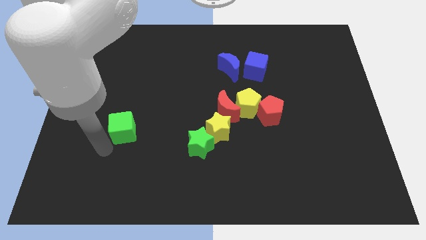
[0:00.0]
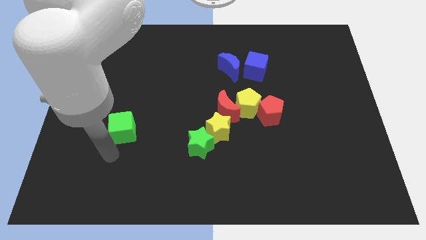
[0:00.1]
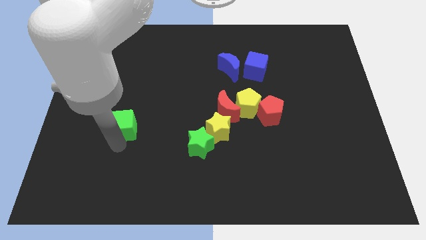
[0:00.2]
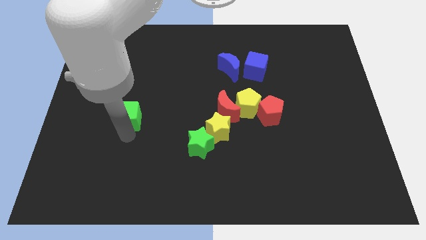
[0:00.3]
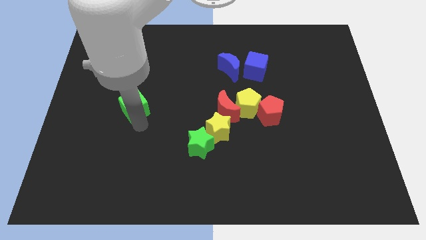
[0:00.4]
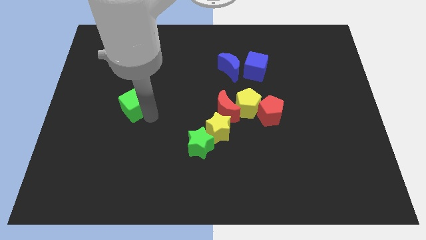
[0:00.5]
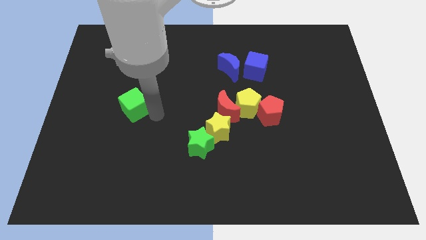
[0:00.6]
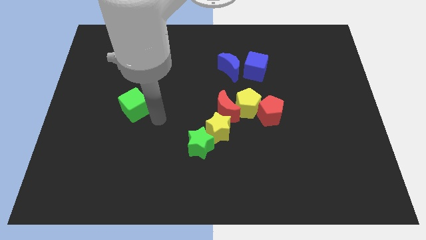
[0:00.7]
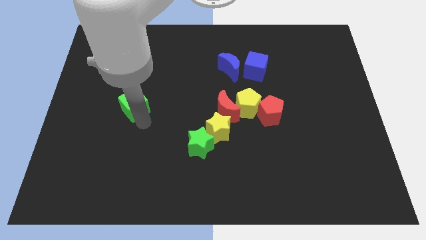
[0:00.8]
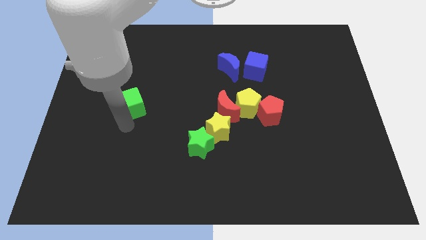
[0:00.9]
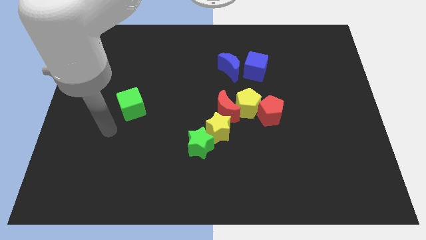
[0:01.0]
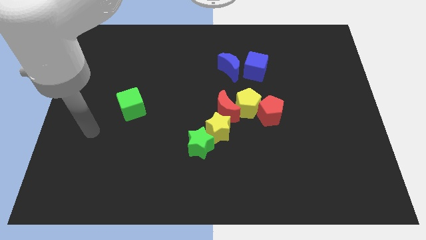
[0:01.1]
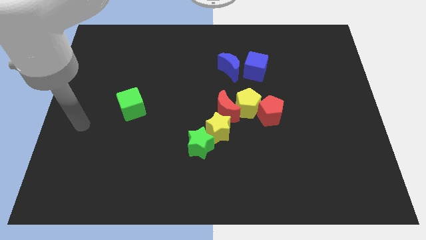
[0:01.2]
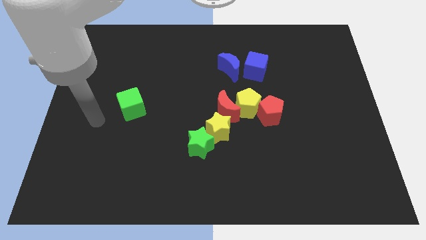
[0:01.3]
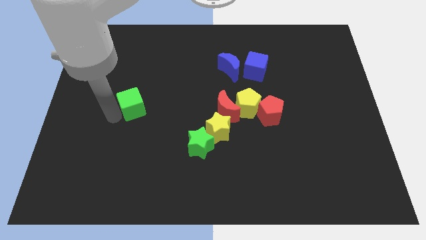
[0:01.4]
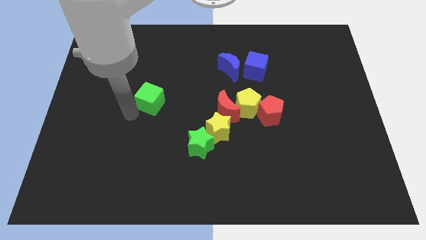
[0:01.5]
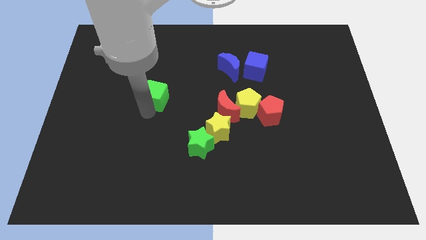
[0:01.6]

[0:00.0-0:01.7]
push the green cube diagonally to the left top of the yellow star

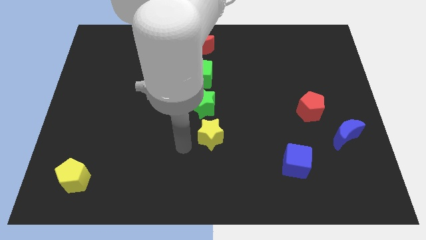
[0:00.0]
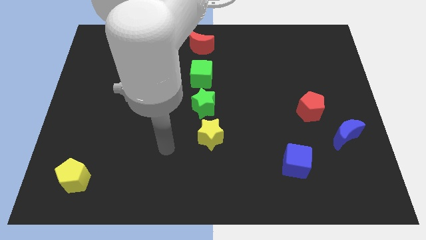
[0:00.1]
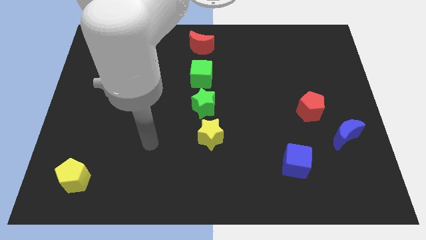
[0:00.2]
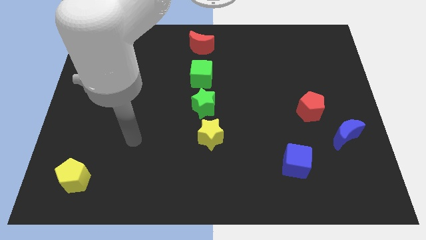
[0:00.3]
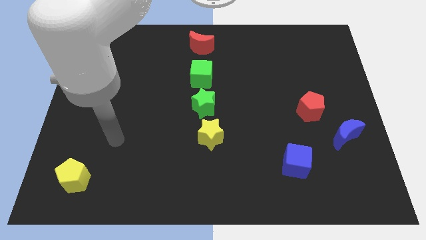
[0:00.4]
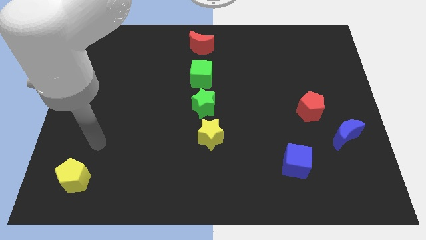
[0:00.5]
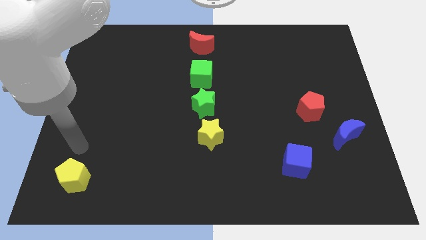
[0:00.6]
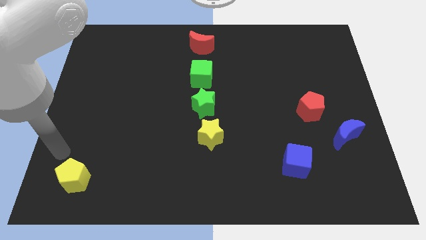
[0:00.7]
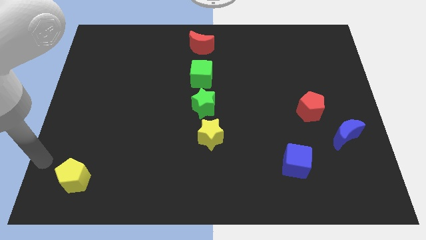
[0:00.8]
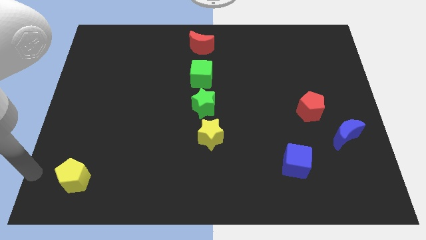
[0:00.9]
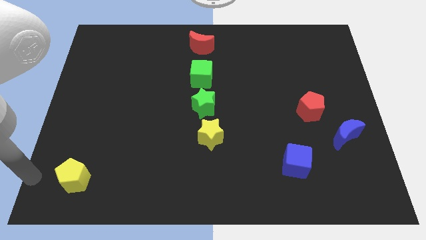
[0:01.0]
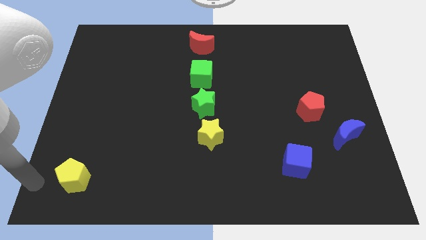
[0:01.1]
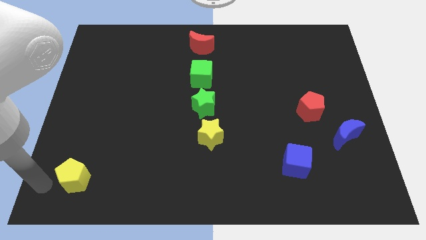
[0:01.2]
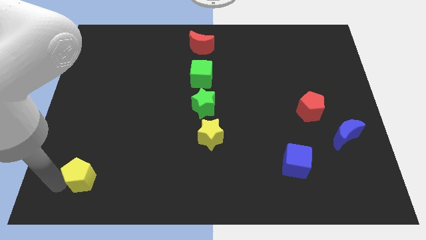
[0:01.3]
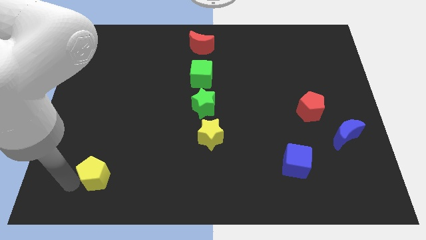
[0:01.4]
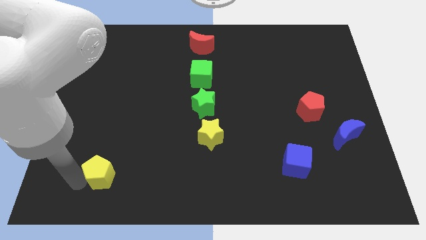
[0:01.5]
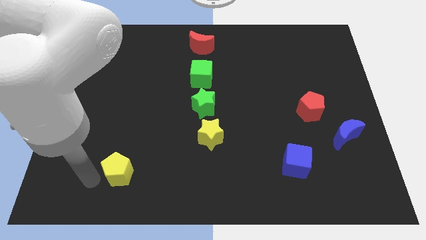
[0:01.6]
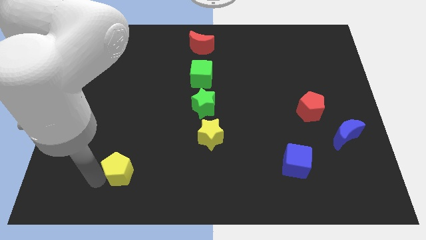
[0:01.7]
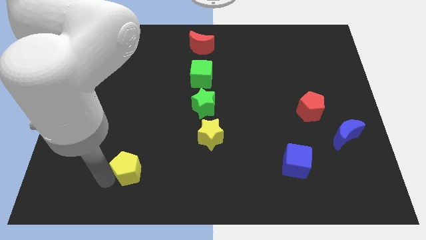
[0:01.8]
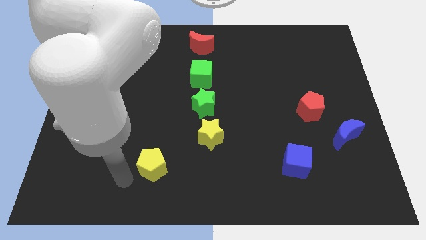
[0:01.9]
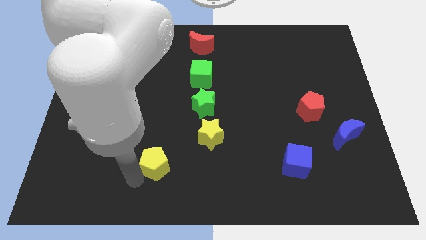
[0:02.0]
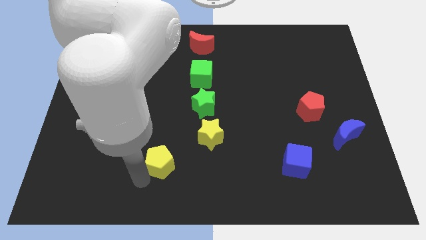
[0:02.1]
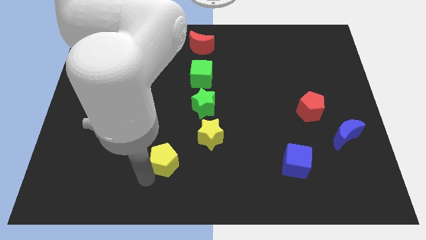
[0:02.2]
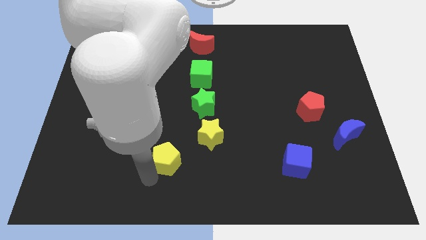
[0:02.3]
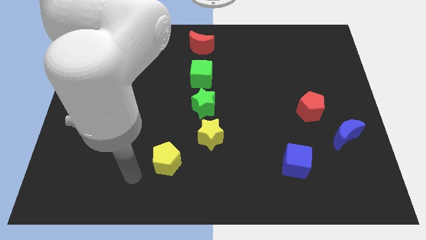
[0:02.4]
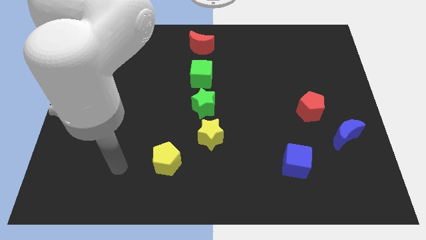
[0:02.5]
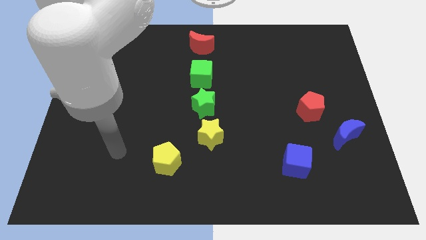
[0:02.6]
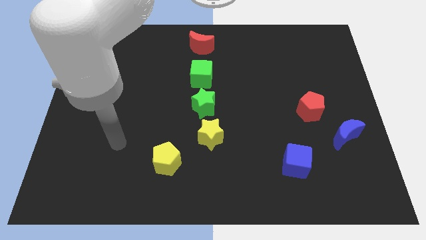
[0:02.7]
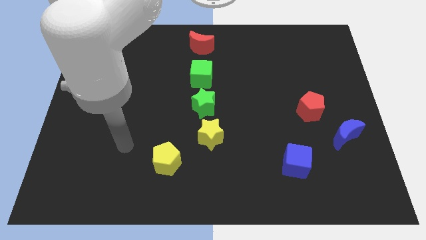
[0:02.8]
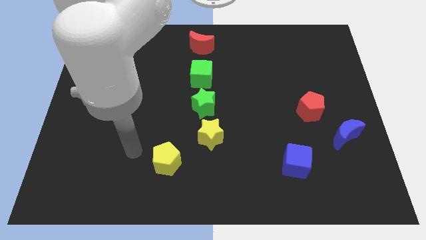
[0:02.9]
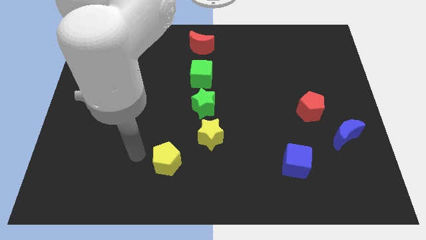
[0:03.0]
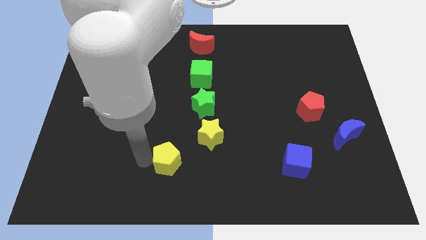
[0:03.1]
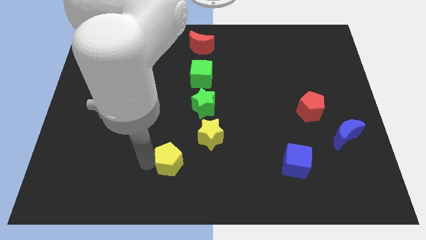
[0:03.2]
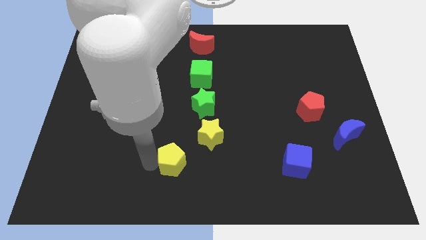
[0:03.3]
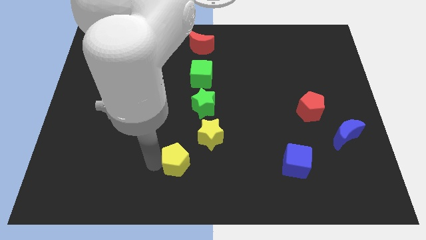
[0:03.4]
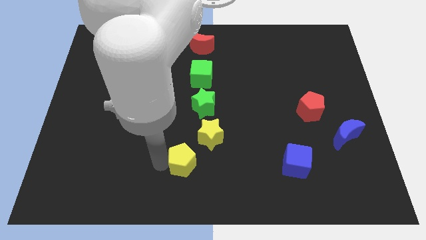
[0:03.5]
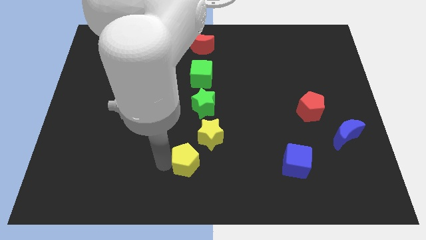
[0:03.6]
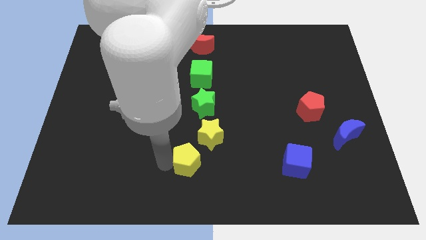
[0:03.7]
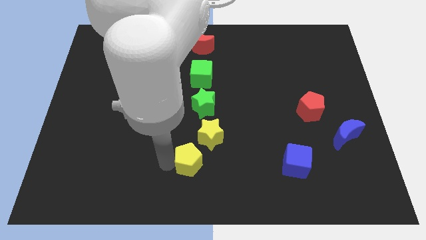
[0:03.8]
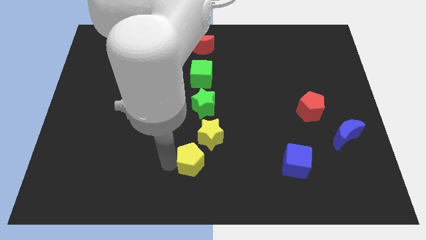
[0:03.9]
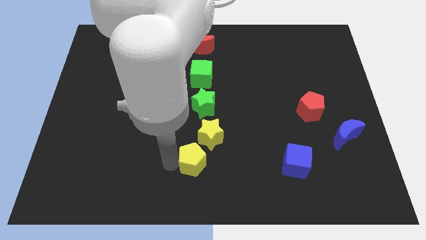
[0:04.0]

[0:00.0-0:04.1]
move the yellow pentagon below the yellow star

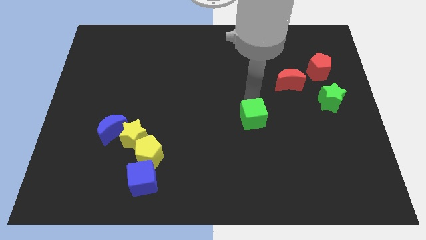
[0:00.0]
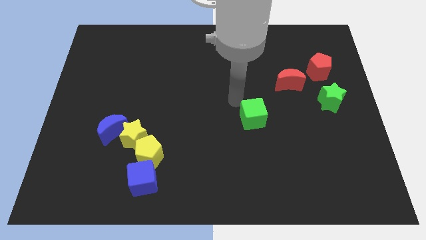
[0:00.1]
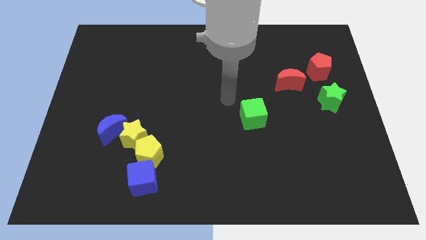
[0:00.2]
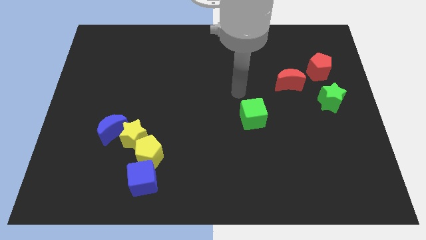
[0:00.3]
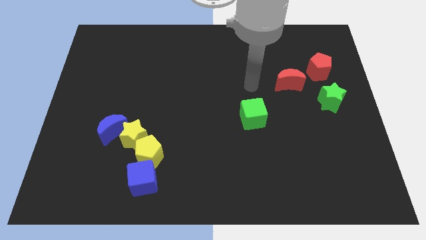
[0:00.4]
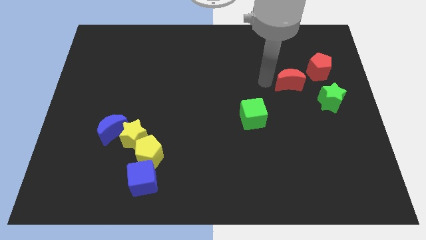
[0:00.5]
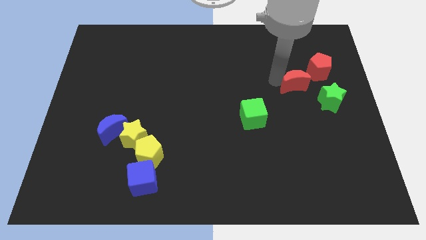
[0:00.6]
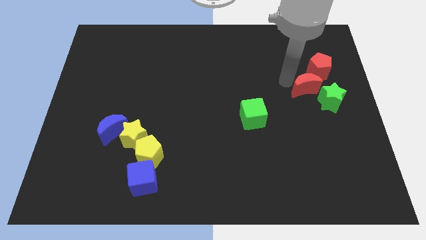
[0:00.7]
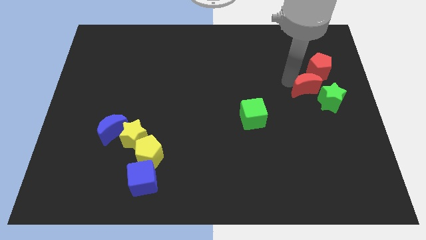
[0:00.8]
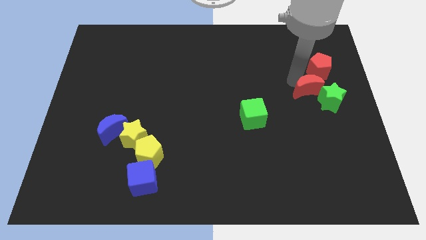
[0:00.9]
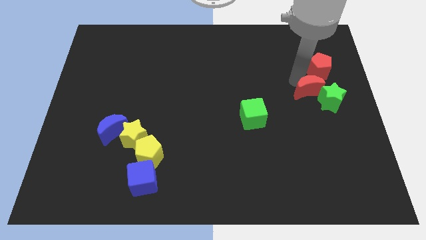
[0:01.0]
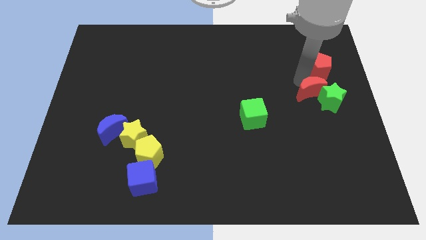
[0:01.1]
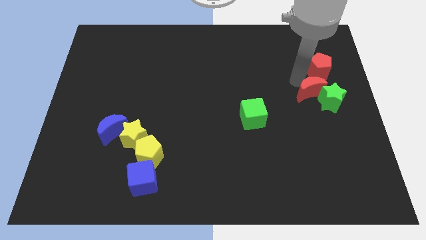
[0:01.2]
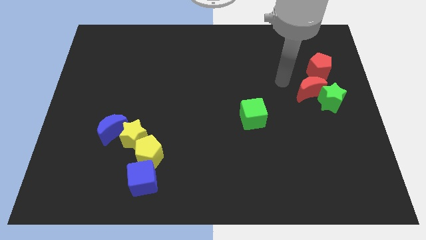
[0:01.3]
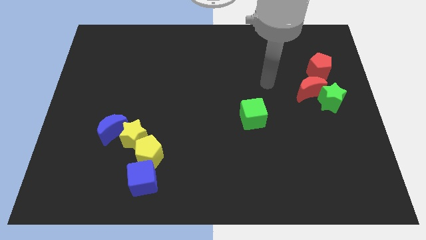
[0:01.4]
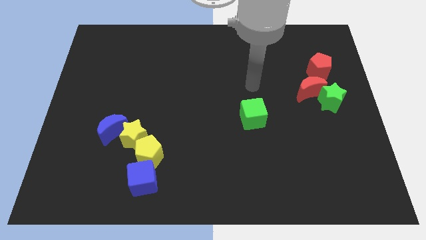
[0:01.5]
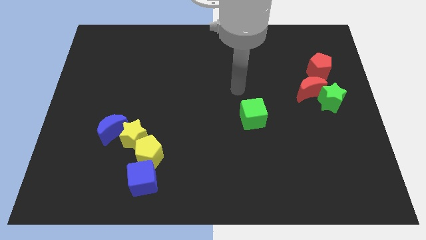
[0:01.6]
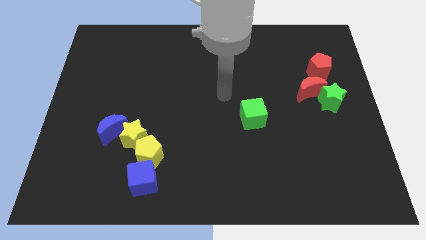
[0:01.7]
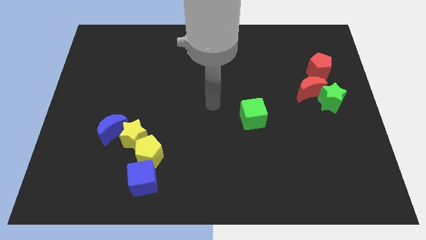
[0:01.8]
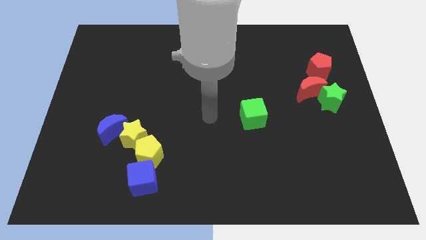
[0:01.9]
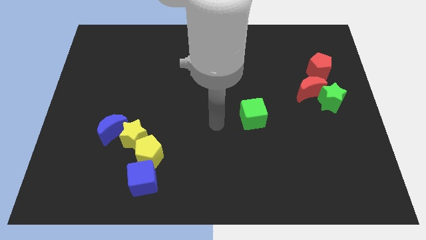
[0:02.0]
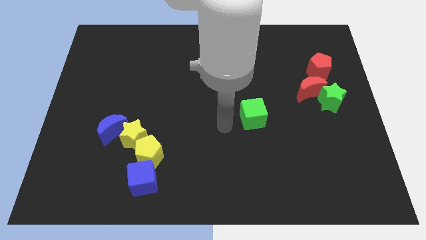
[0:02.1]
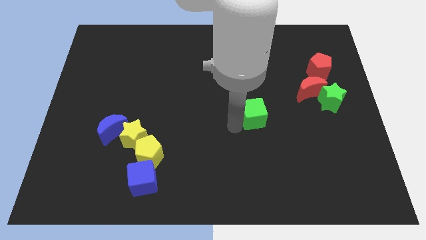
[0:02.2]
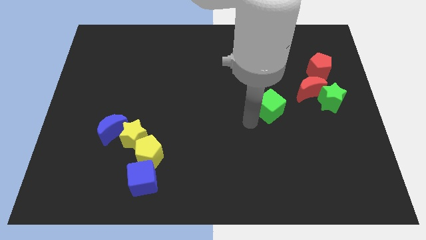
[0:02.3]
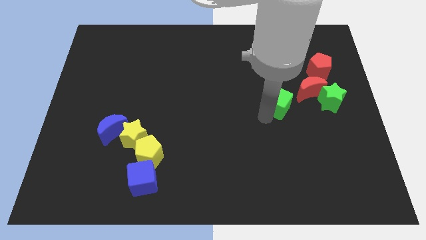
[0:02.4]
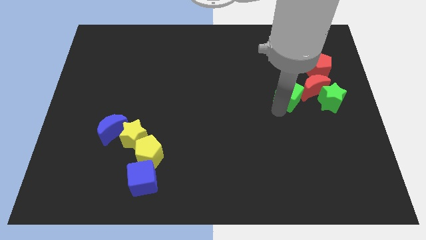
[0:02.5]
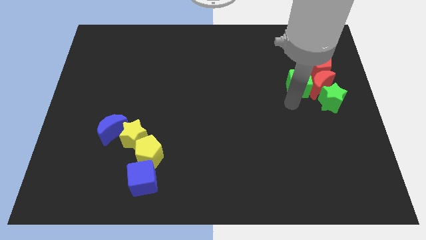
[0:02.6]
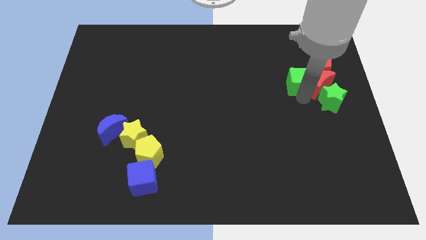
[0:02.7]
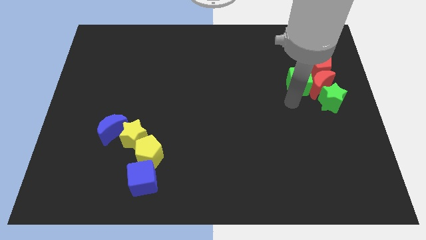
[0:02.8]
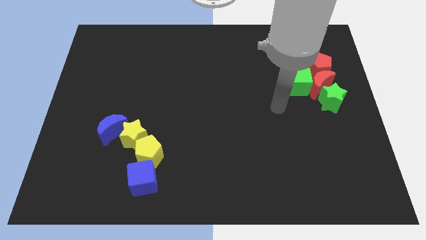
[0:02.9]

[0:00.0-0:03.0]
push the green cube into the red crescent

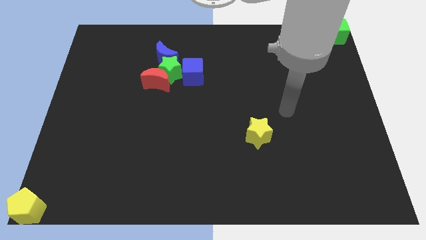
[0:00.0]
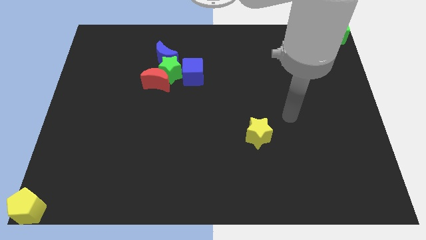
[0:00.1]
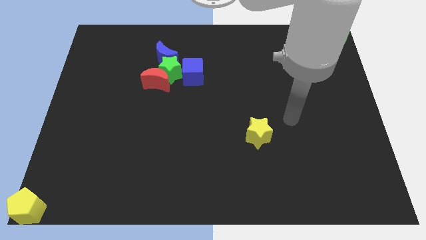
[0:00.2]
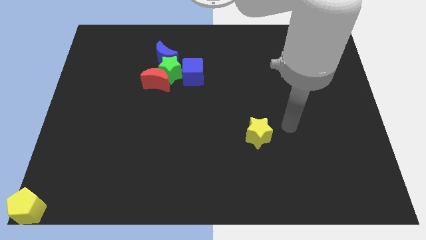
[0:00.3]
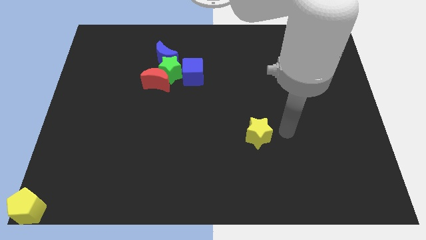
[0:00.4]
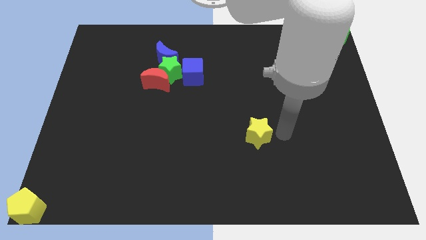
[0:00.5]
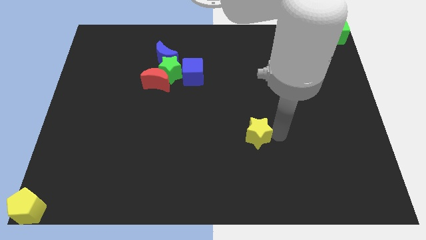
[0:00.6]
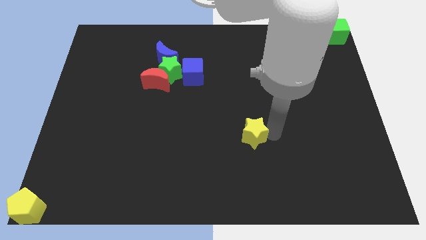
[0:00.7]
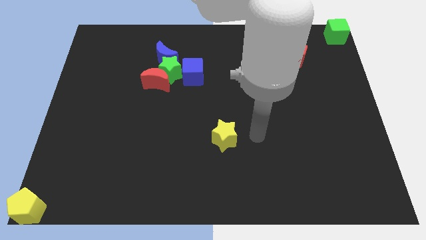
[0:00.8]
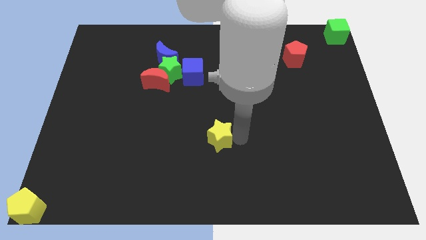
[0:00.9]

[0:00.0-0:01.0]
move the yellow star diagonally to the red moon
